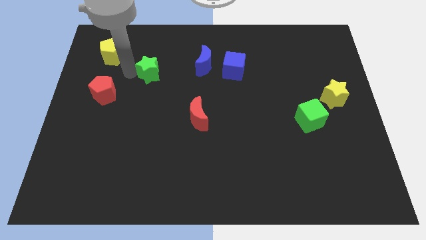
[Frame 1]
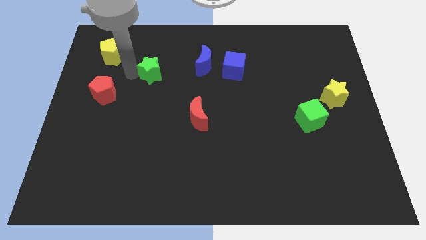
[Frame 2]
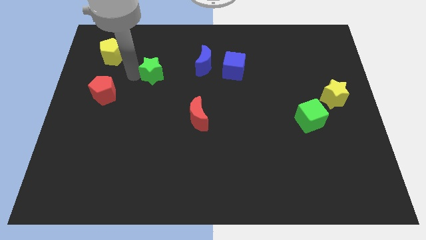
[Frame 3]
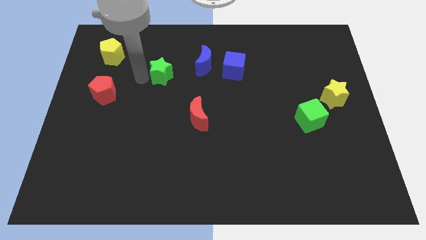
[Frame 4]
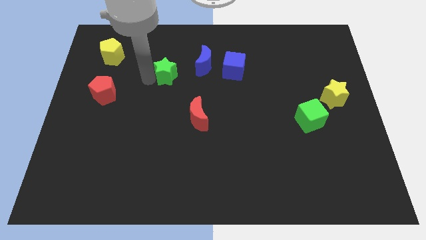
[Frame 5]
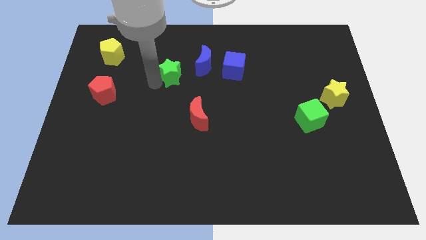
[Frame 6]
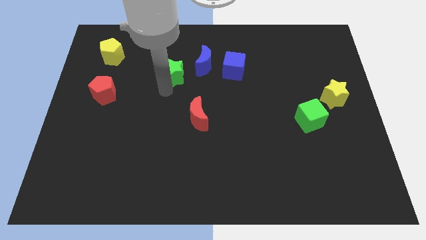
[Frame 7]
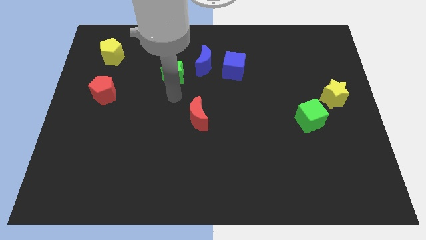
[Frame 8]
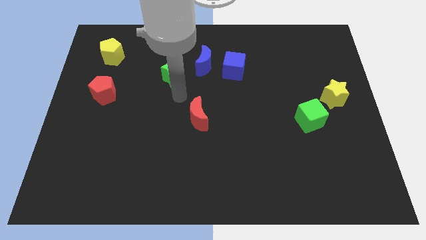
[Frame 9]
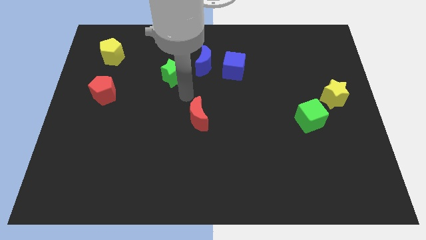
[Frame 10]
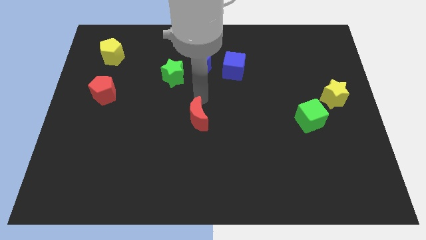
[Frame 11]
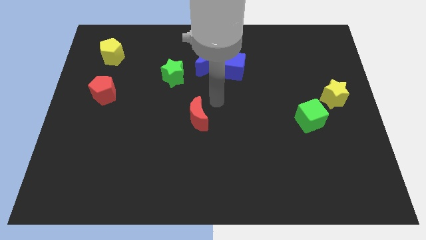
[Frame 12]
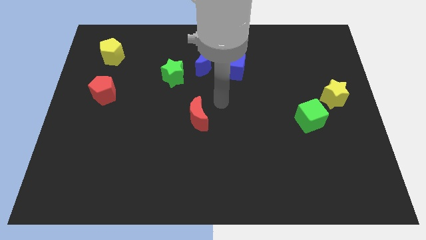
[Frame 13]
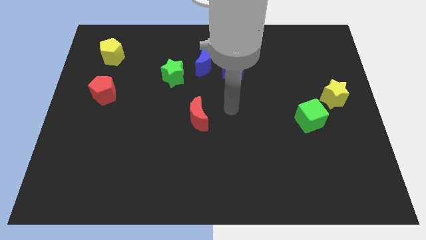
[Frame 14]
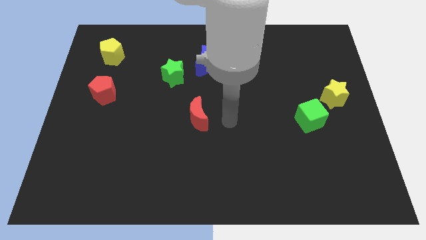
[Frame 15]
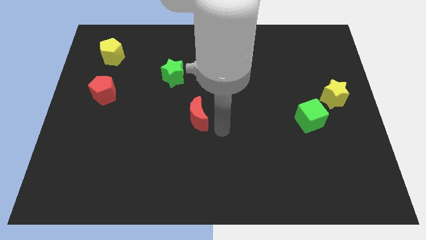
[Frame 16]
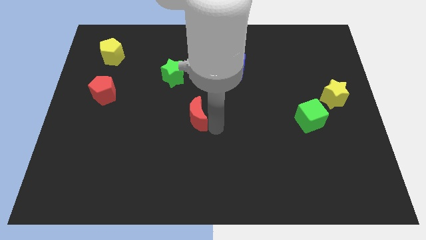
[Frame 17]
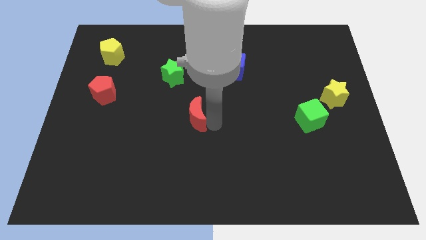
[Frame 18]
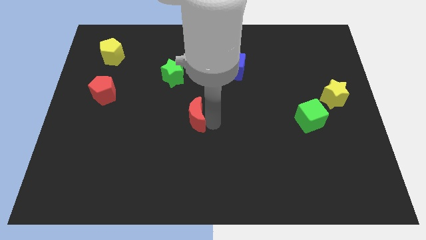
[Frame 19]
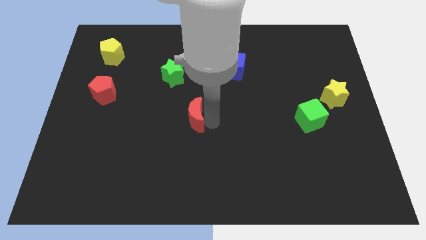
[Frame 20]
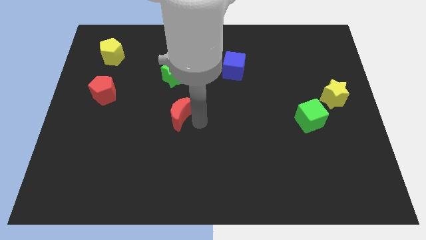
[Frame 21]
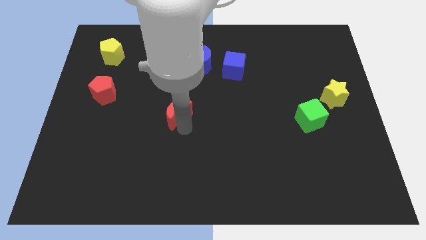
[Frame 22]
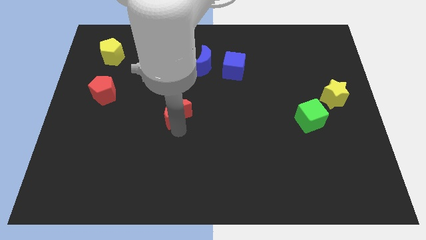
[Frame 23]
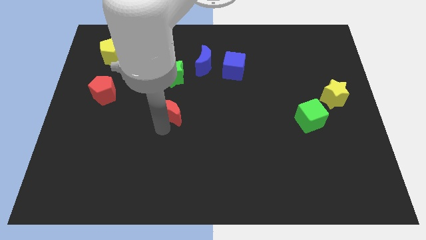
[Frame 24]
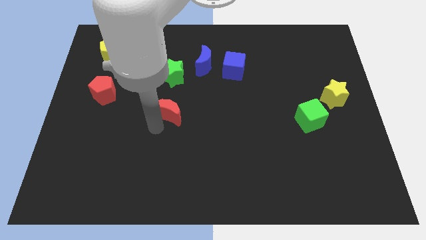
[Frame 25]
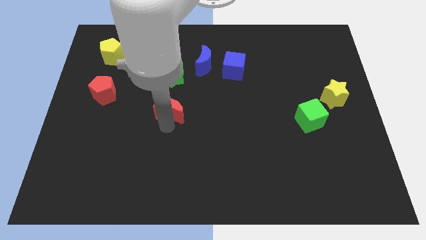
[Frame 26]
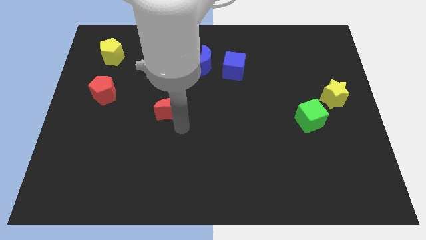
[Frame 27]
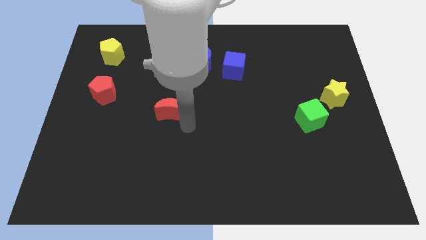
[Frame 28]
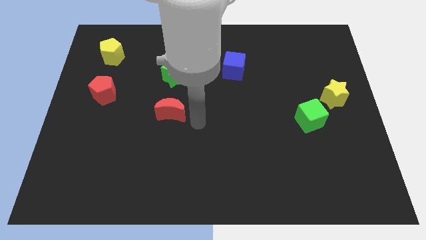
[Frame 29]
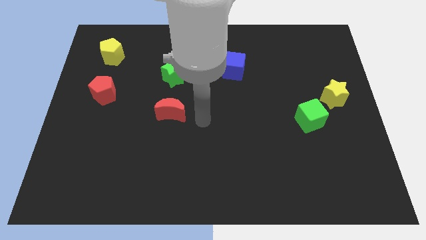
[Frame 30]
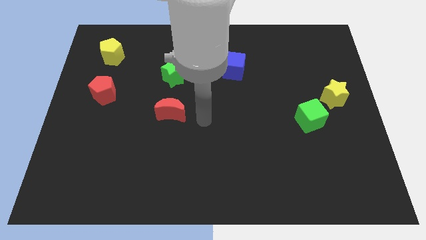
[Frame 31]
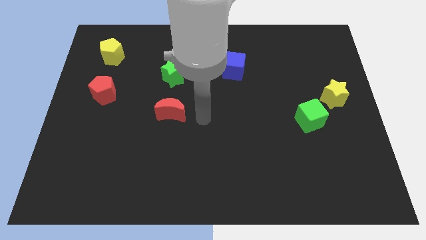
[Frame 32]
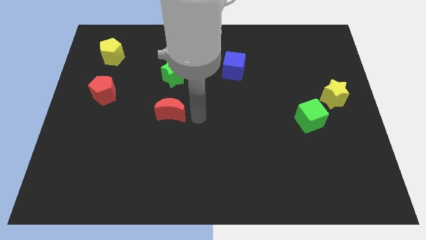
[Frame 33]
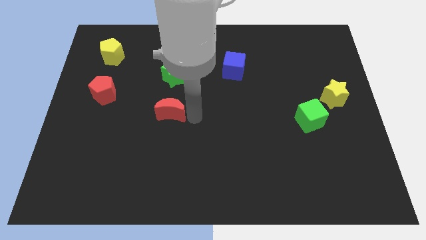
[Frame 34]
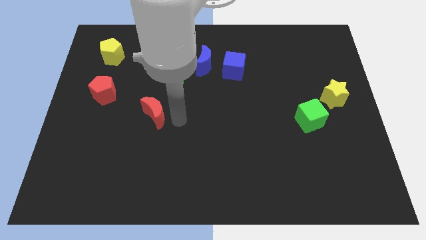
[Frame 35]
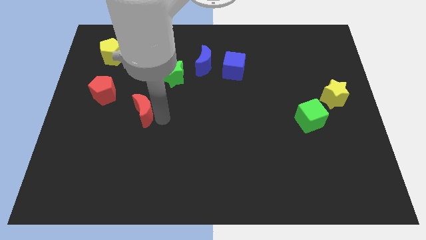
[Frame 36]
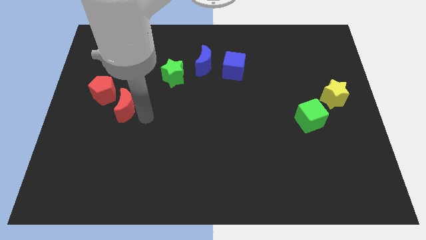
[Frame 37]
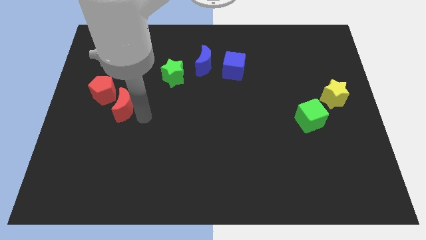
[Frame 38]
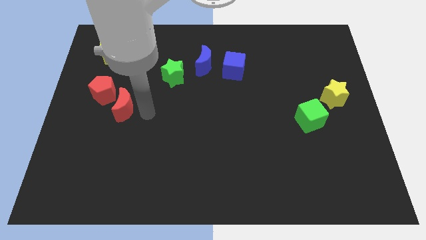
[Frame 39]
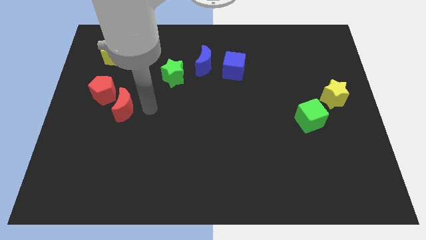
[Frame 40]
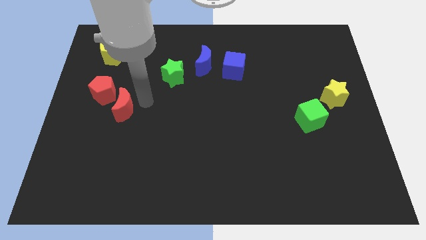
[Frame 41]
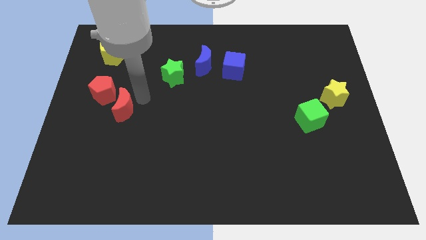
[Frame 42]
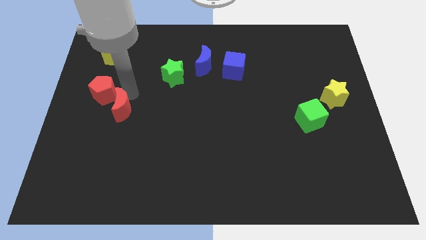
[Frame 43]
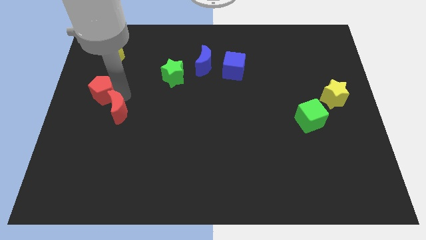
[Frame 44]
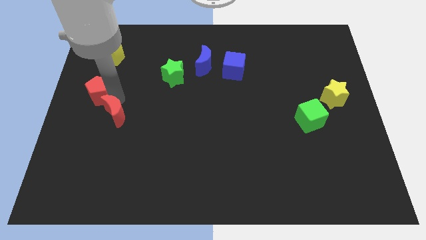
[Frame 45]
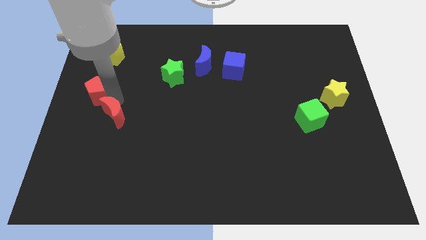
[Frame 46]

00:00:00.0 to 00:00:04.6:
slide the red moon towards the left side of the board

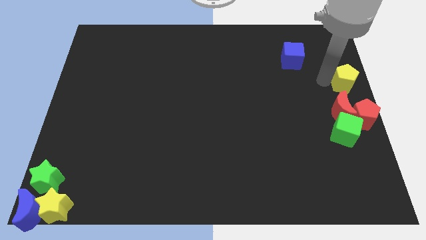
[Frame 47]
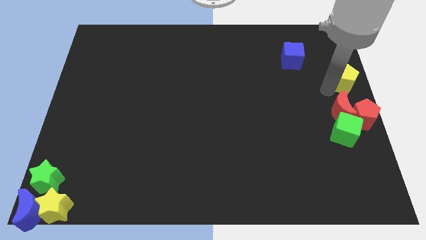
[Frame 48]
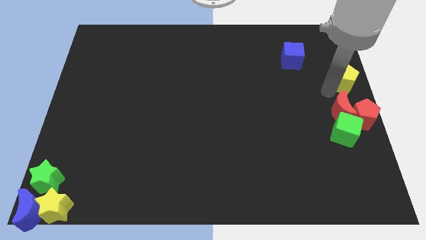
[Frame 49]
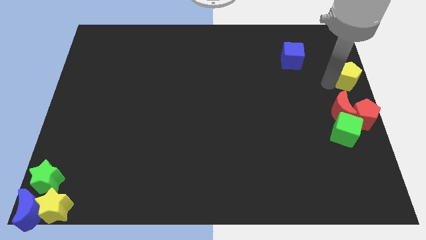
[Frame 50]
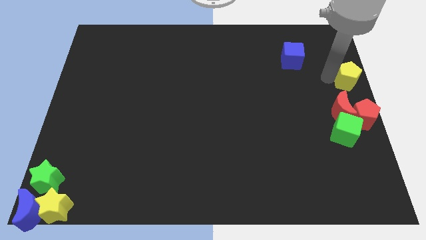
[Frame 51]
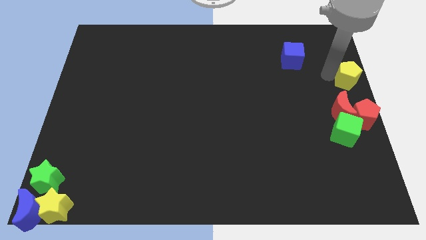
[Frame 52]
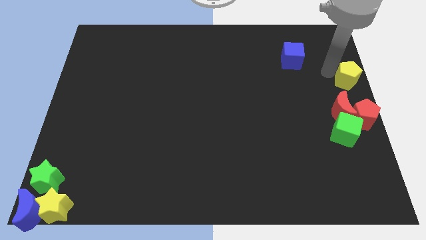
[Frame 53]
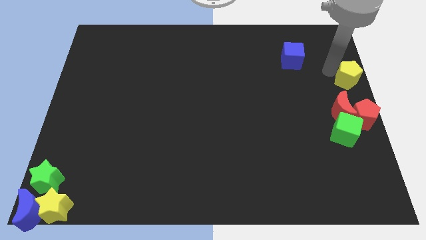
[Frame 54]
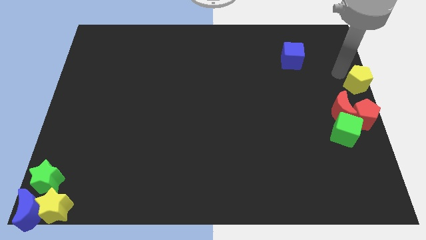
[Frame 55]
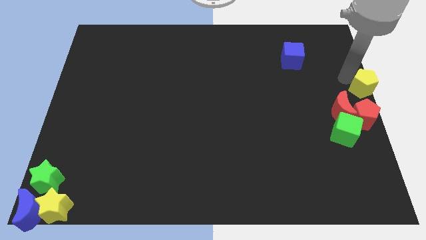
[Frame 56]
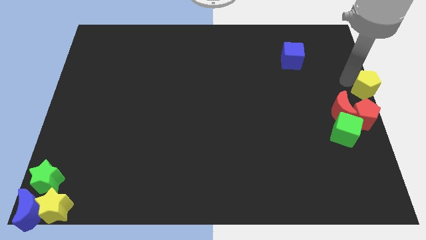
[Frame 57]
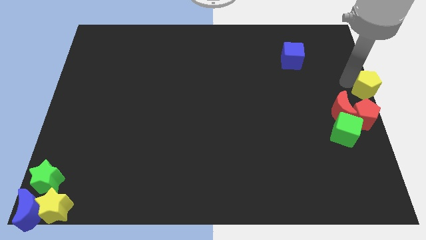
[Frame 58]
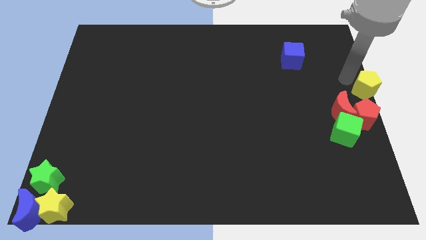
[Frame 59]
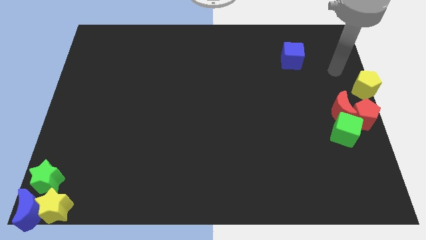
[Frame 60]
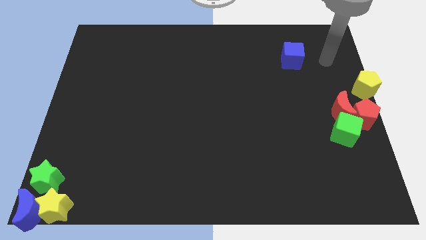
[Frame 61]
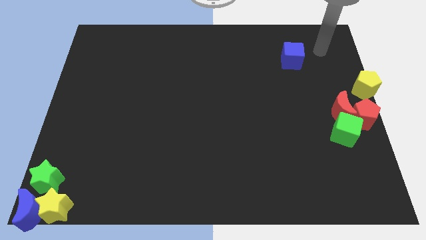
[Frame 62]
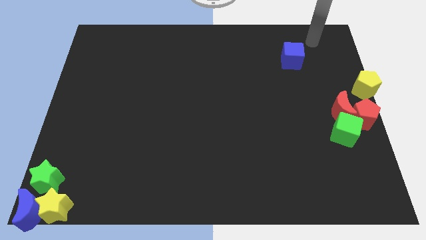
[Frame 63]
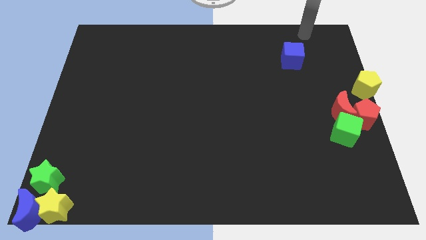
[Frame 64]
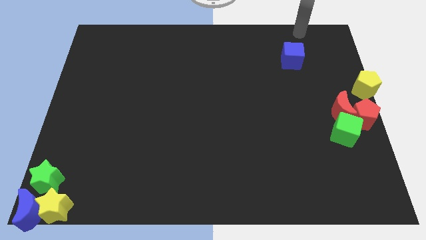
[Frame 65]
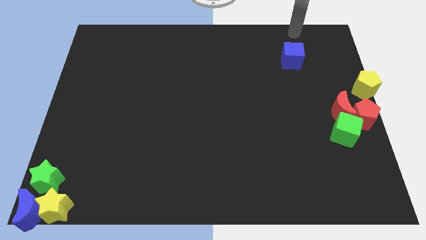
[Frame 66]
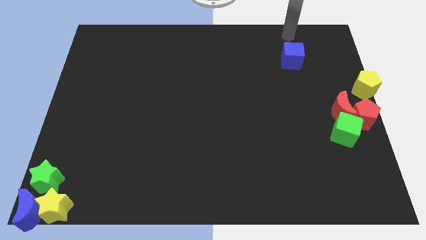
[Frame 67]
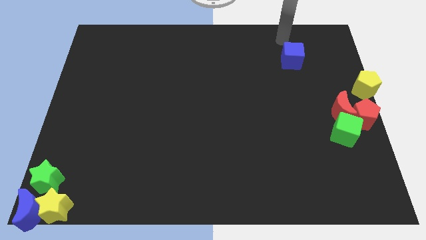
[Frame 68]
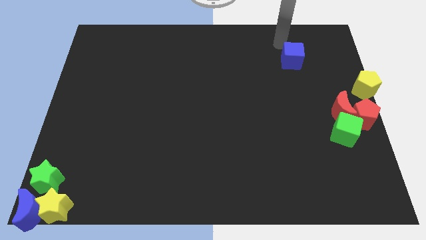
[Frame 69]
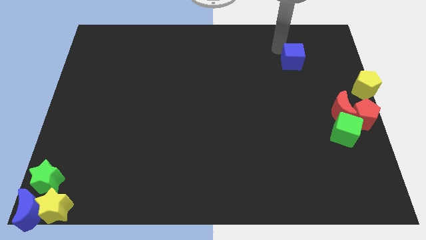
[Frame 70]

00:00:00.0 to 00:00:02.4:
move the yellow pentagon to the center right

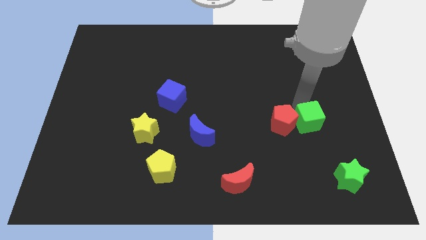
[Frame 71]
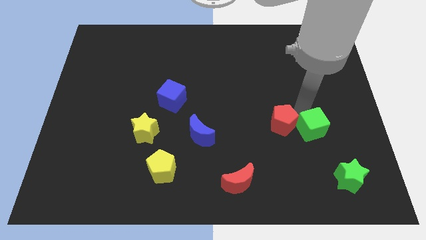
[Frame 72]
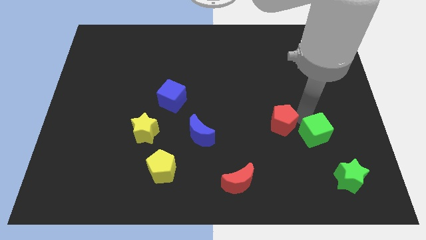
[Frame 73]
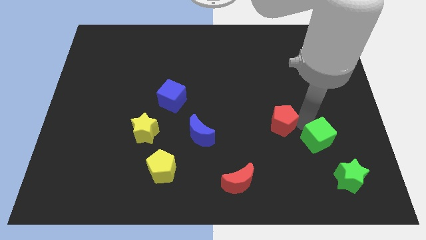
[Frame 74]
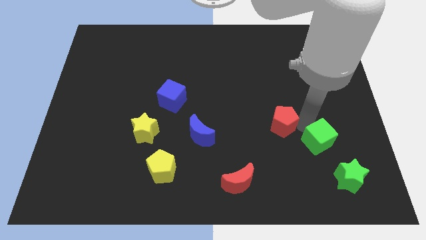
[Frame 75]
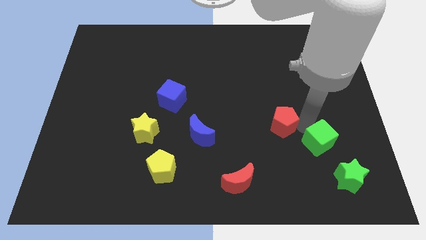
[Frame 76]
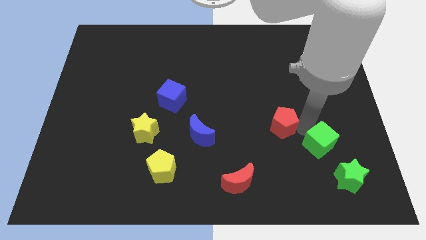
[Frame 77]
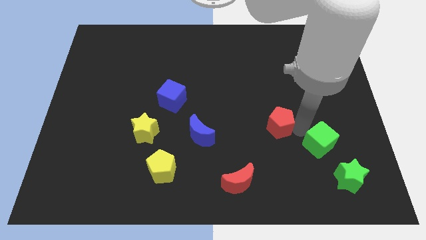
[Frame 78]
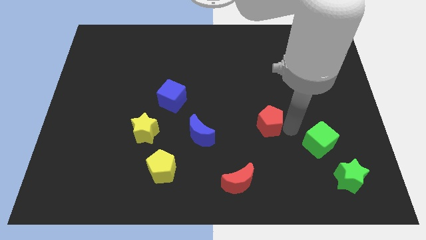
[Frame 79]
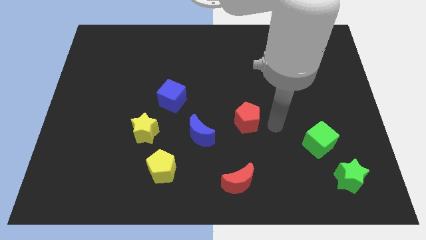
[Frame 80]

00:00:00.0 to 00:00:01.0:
separate the green cube and the red pentagon

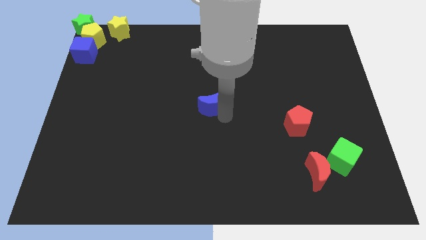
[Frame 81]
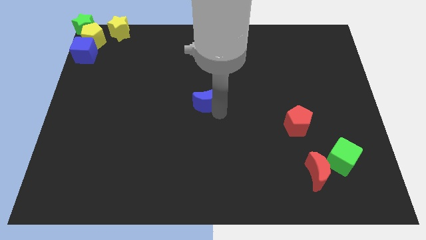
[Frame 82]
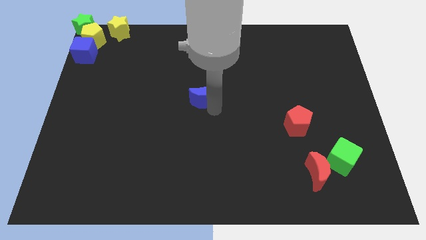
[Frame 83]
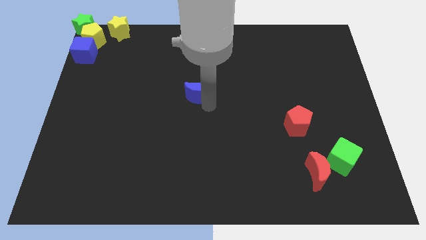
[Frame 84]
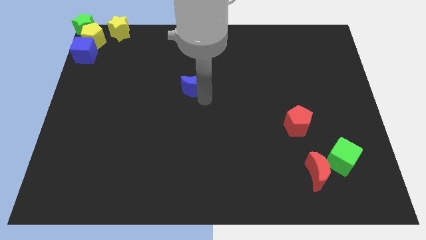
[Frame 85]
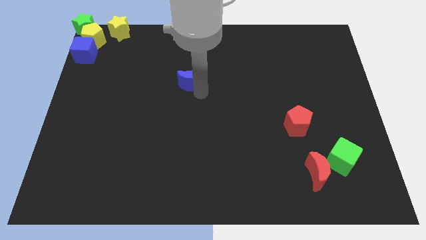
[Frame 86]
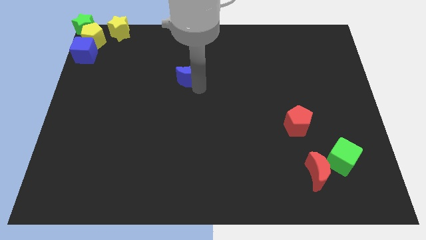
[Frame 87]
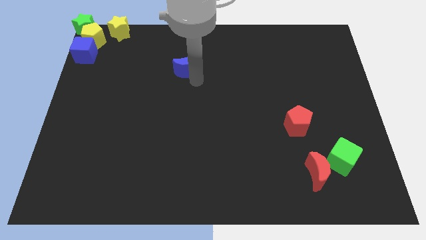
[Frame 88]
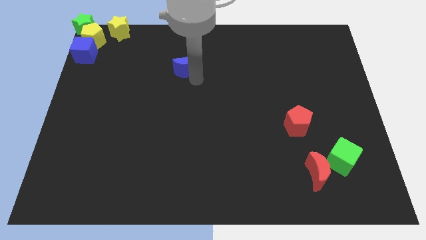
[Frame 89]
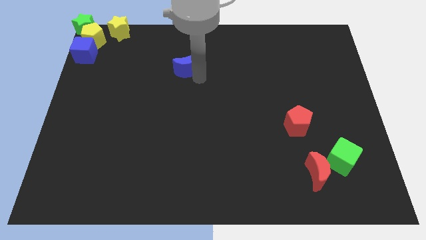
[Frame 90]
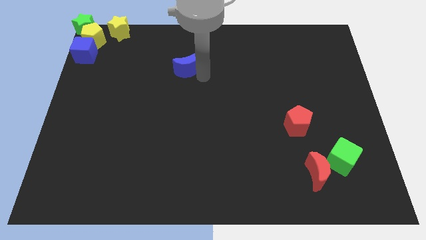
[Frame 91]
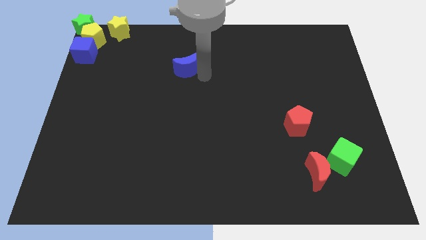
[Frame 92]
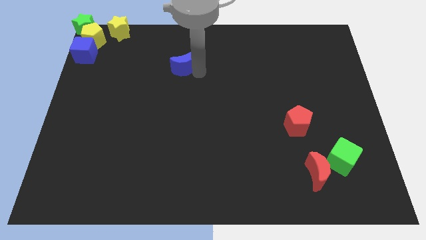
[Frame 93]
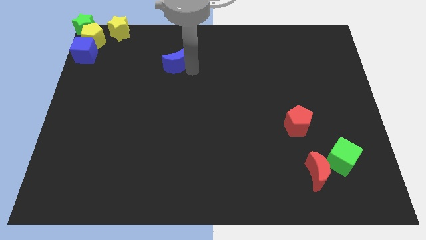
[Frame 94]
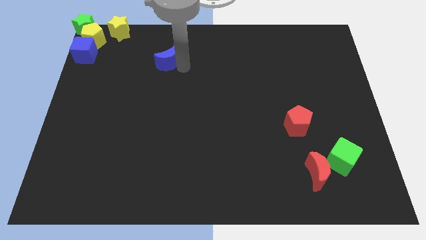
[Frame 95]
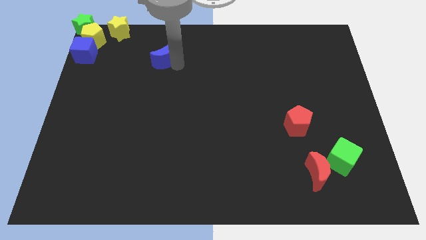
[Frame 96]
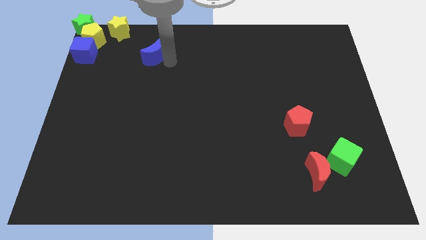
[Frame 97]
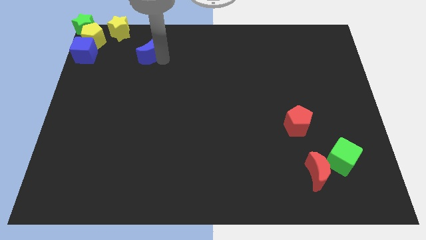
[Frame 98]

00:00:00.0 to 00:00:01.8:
slide the blue crescent towards the group of blocks at the top left side of the board
